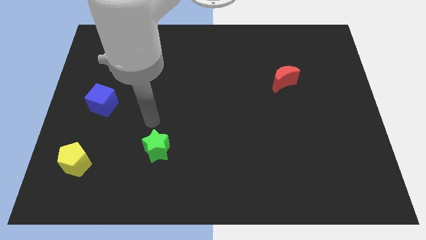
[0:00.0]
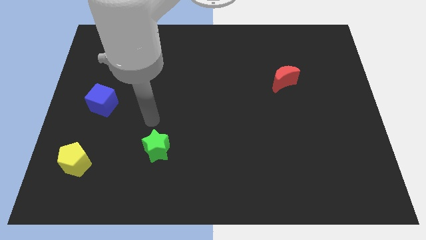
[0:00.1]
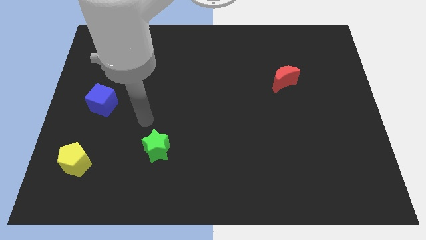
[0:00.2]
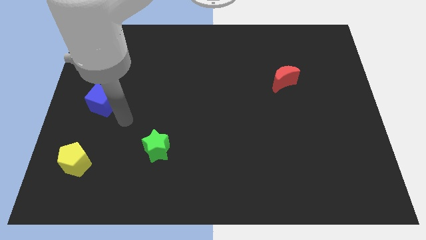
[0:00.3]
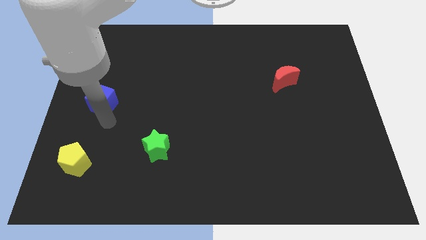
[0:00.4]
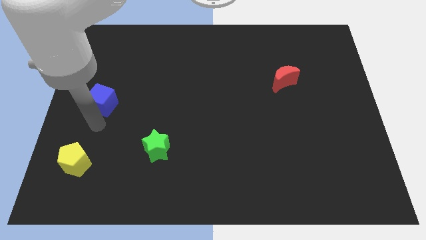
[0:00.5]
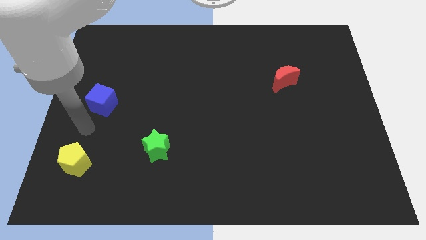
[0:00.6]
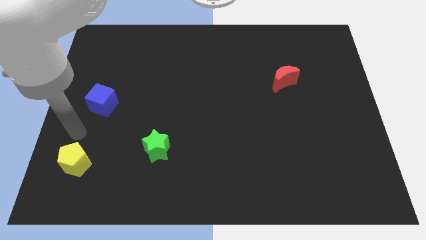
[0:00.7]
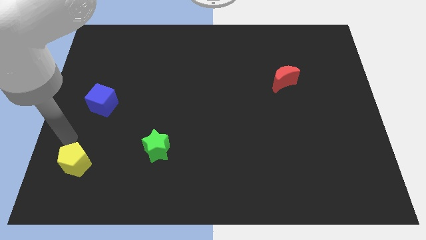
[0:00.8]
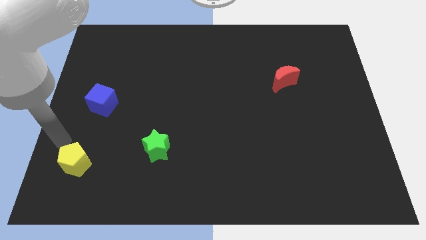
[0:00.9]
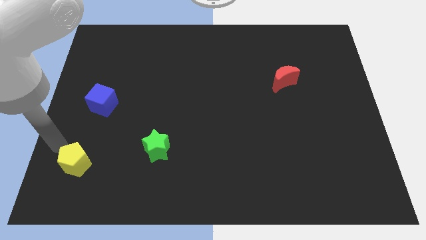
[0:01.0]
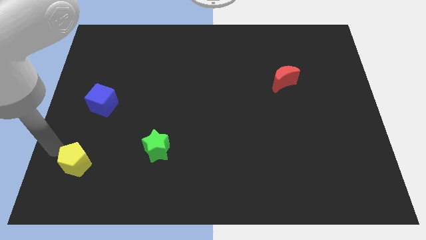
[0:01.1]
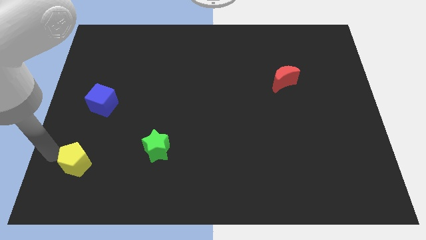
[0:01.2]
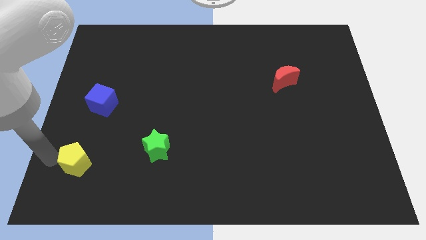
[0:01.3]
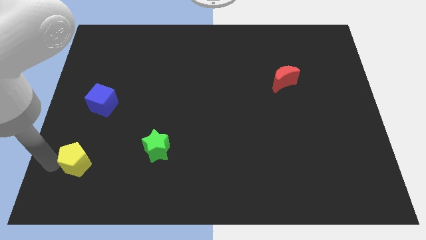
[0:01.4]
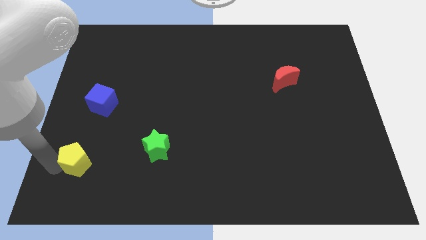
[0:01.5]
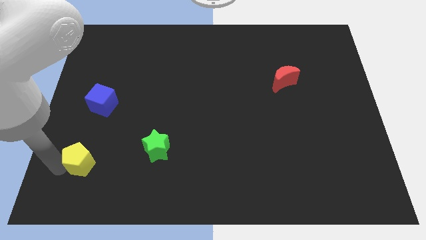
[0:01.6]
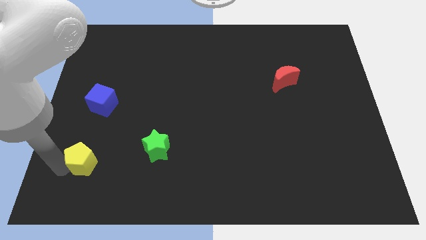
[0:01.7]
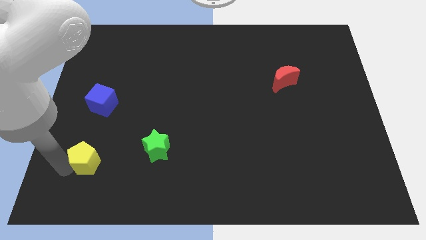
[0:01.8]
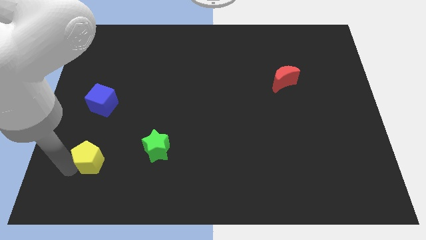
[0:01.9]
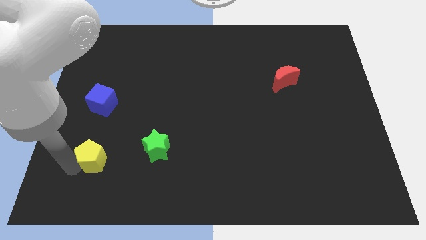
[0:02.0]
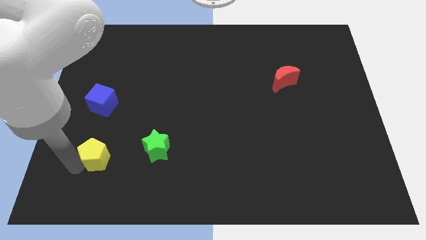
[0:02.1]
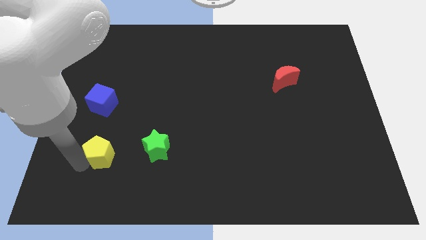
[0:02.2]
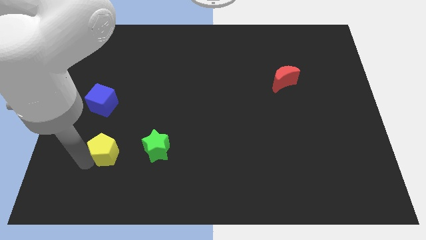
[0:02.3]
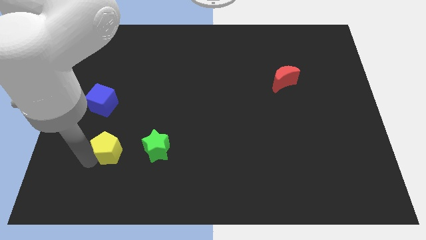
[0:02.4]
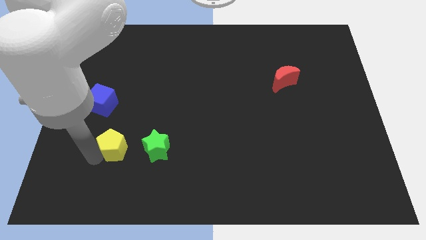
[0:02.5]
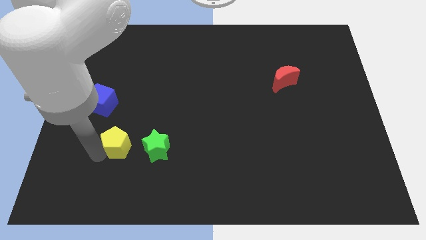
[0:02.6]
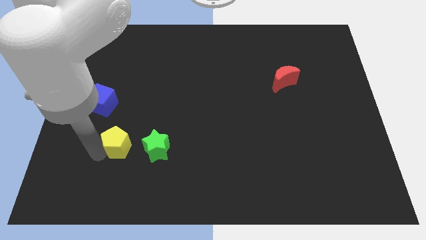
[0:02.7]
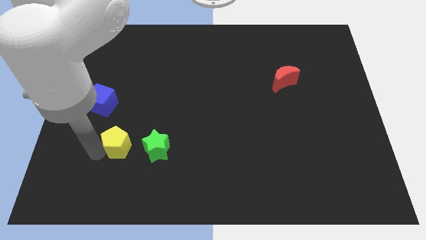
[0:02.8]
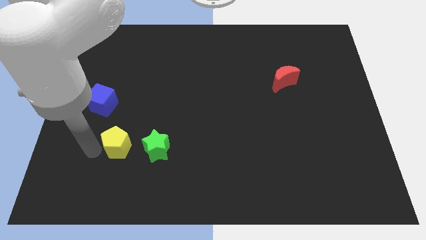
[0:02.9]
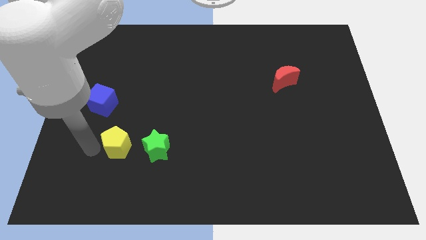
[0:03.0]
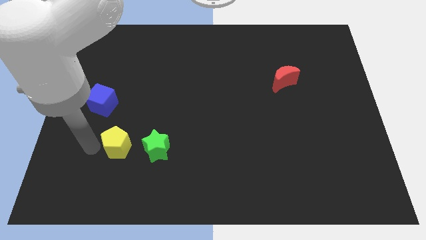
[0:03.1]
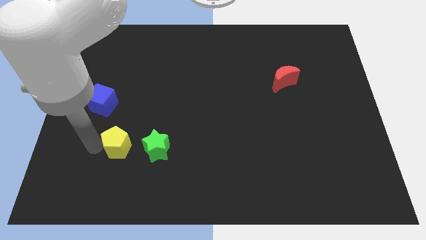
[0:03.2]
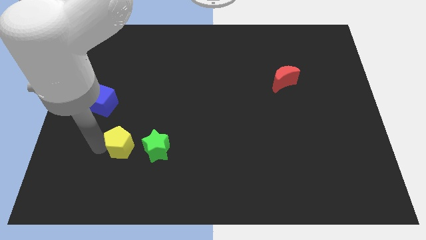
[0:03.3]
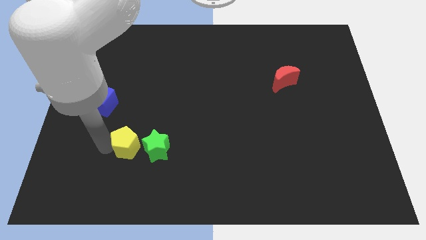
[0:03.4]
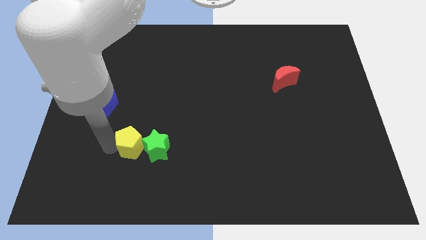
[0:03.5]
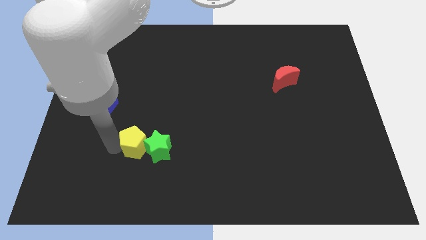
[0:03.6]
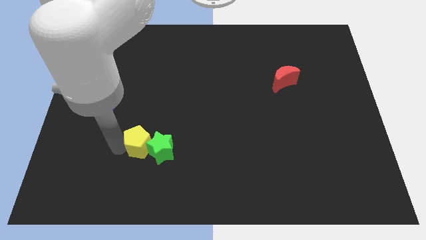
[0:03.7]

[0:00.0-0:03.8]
slide the yellow block close to the star

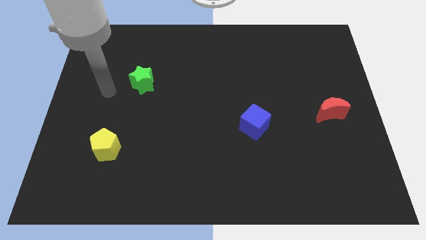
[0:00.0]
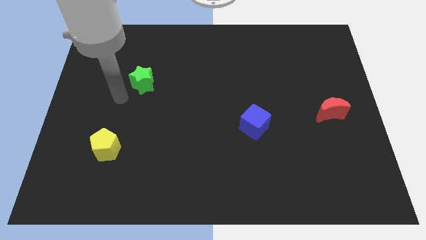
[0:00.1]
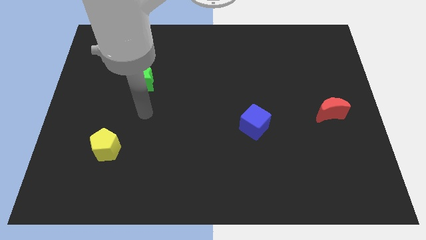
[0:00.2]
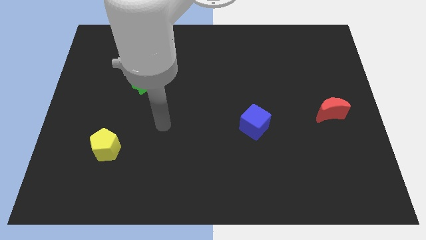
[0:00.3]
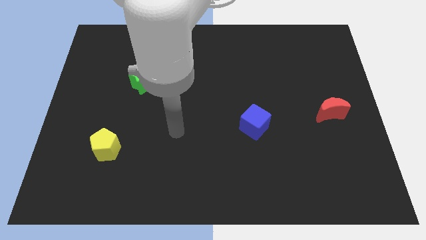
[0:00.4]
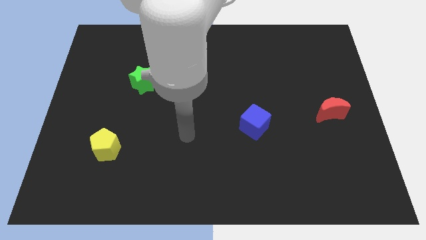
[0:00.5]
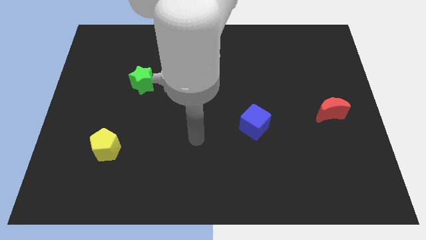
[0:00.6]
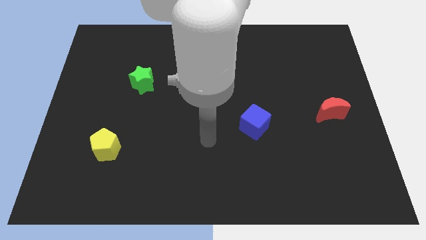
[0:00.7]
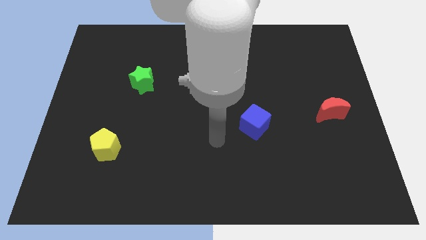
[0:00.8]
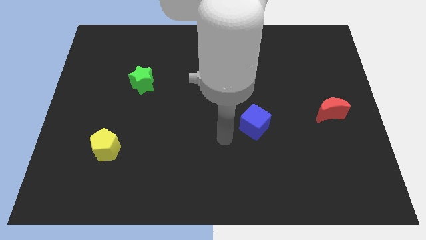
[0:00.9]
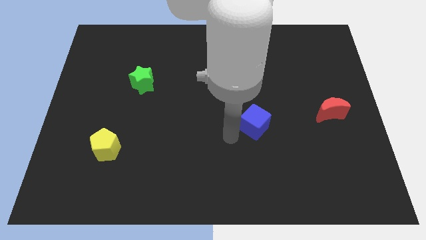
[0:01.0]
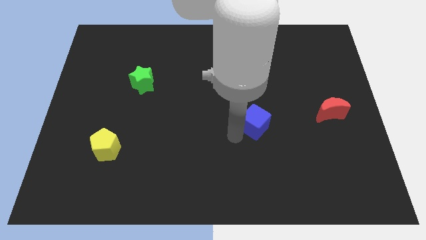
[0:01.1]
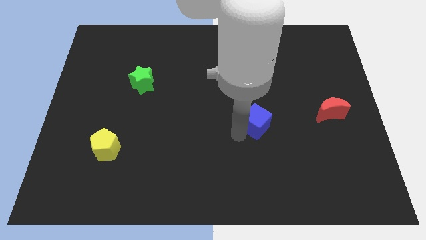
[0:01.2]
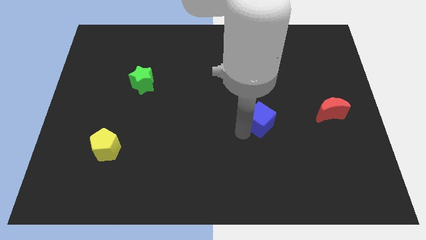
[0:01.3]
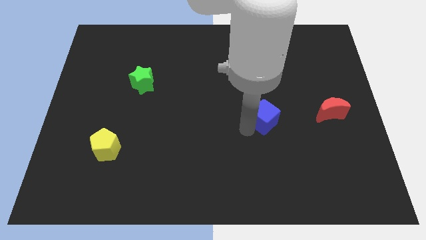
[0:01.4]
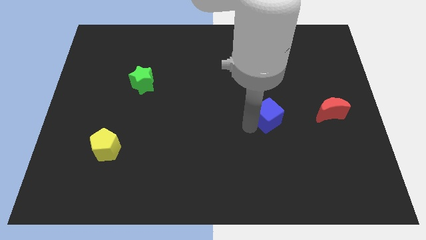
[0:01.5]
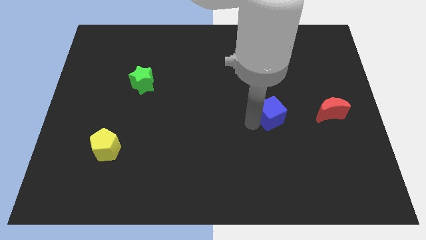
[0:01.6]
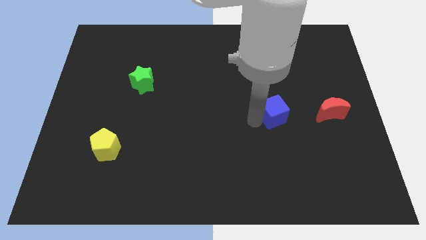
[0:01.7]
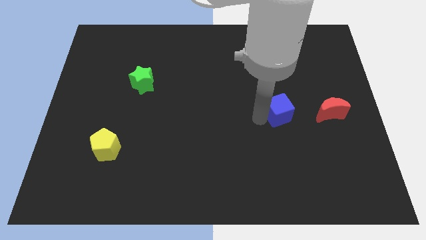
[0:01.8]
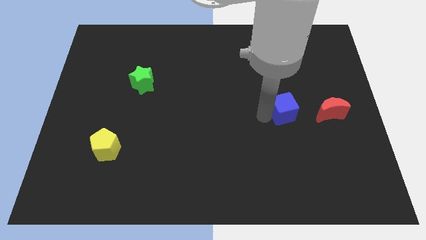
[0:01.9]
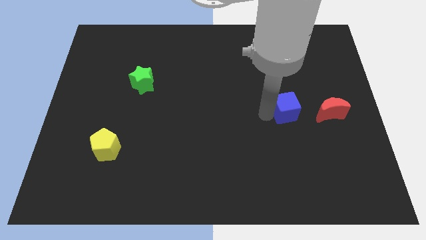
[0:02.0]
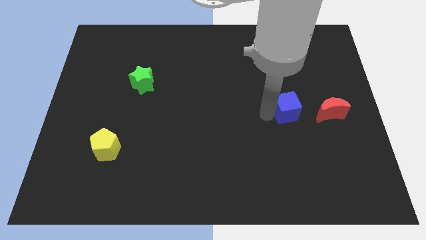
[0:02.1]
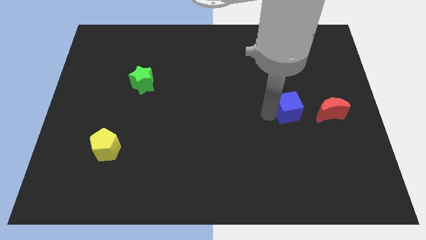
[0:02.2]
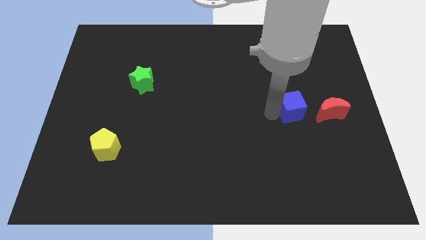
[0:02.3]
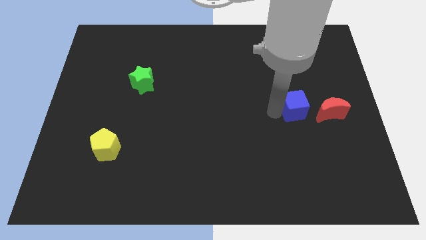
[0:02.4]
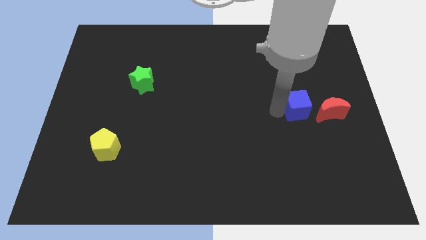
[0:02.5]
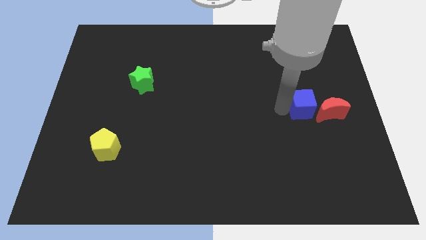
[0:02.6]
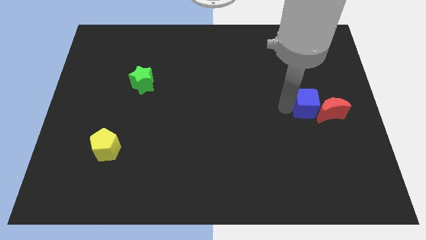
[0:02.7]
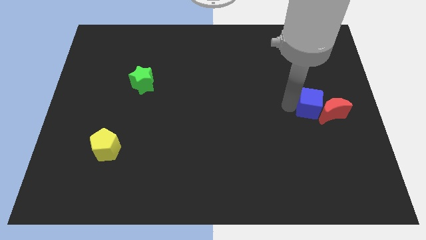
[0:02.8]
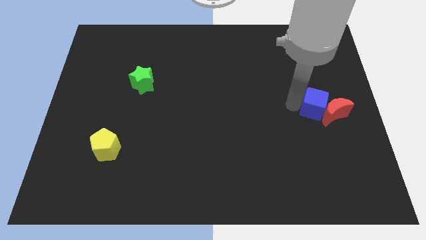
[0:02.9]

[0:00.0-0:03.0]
move the blue block to the red moon

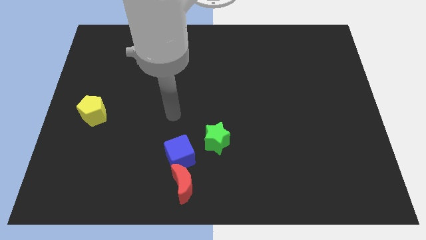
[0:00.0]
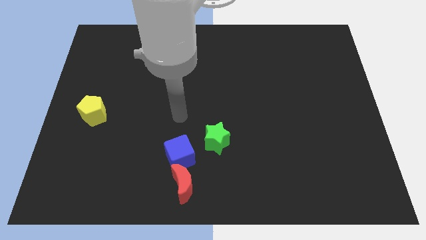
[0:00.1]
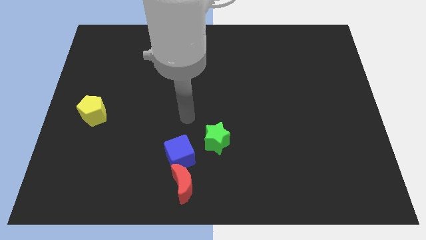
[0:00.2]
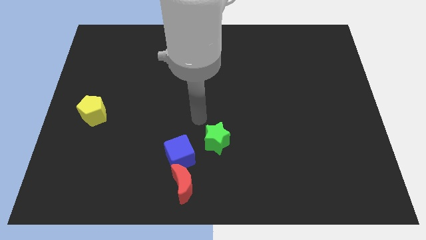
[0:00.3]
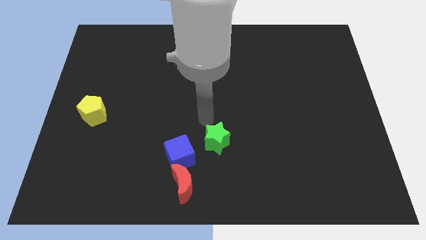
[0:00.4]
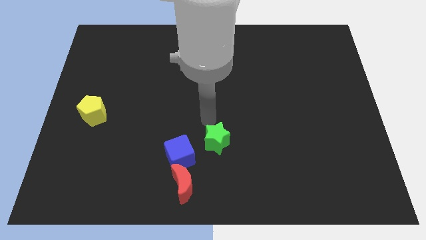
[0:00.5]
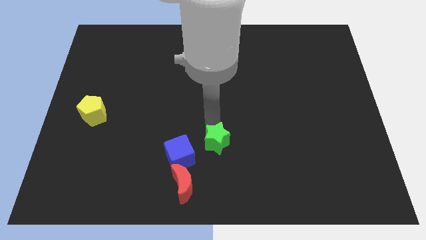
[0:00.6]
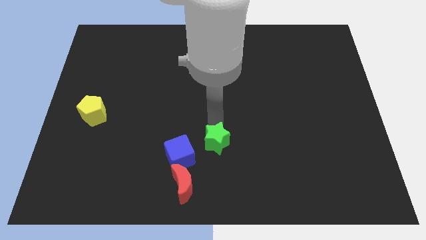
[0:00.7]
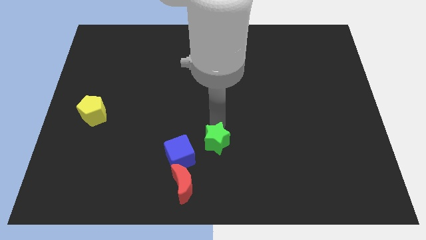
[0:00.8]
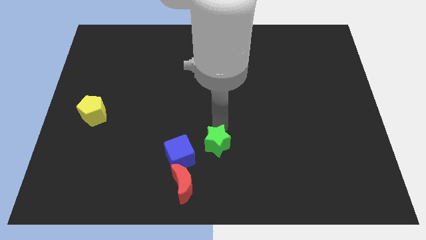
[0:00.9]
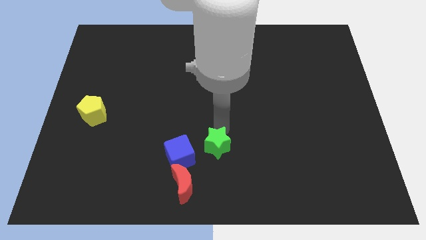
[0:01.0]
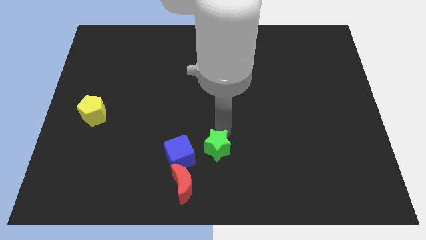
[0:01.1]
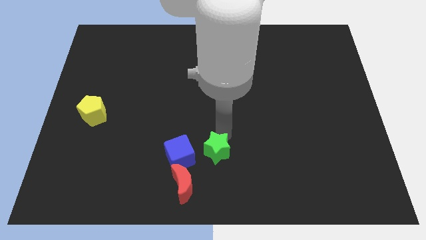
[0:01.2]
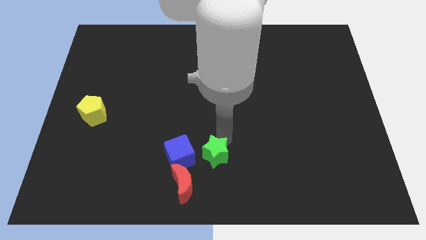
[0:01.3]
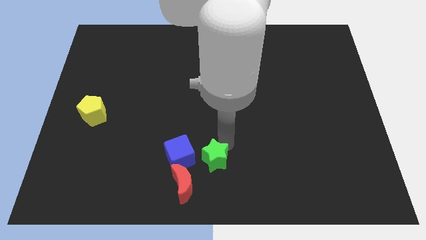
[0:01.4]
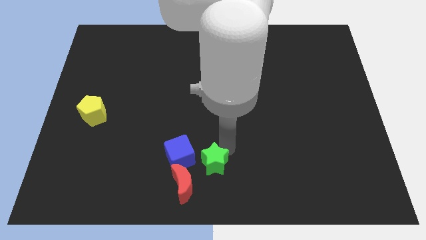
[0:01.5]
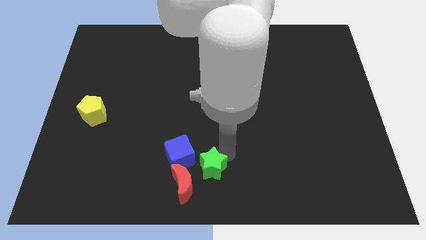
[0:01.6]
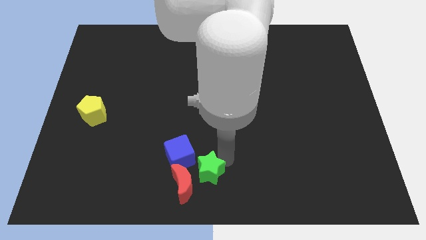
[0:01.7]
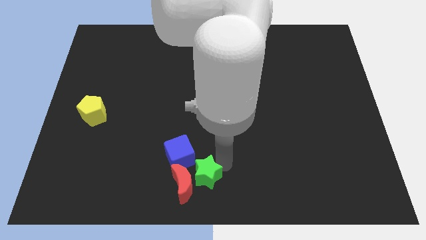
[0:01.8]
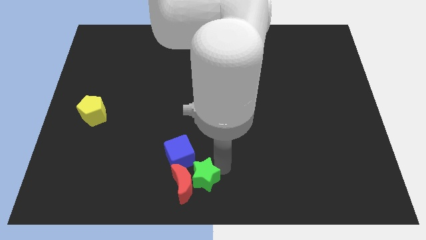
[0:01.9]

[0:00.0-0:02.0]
slide the star next to the red block
